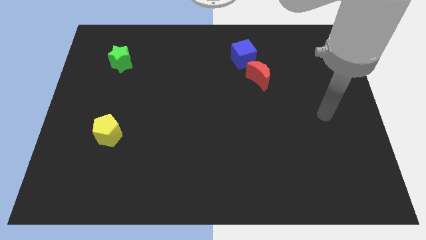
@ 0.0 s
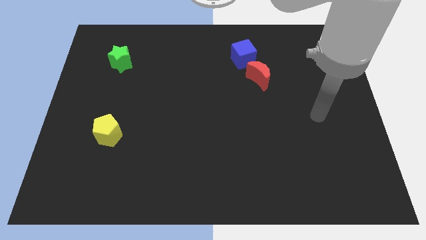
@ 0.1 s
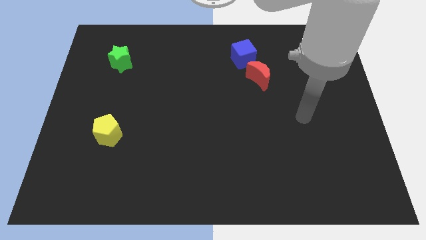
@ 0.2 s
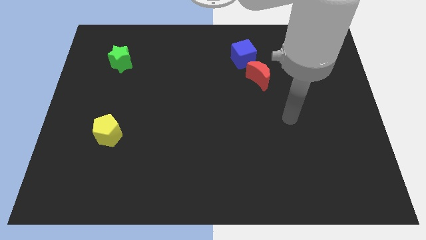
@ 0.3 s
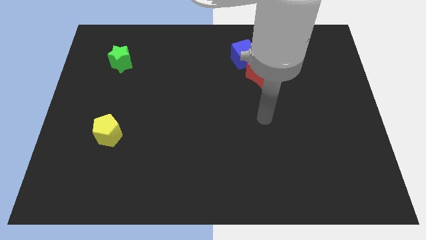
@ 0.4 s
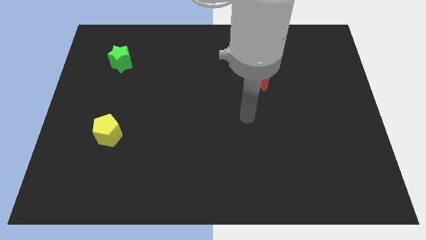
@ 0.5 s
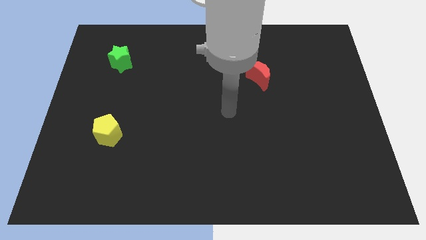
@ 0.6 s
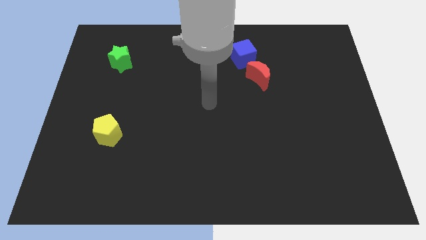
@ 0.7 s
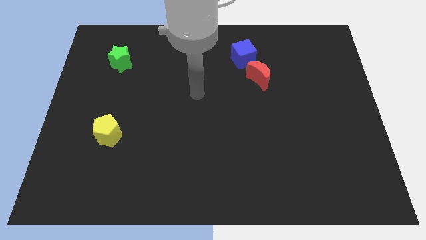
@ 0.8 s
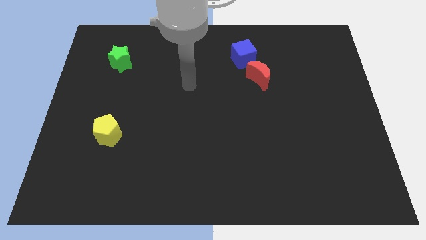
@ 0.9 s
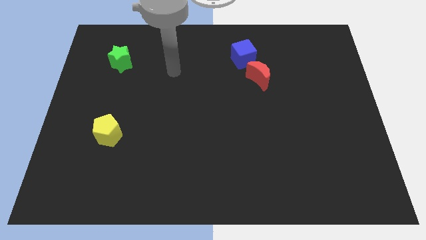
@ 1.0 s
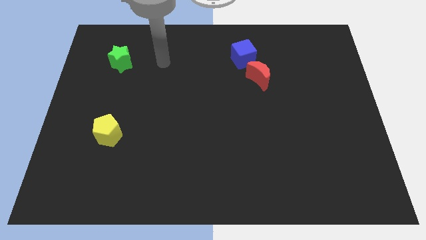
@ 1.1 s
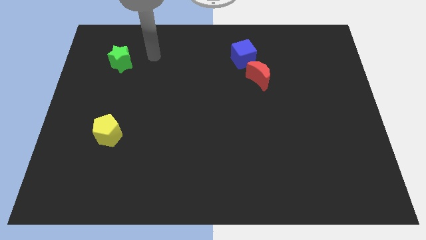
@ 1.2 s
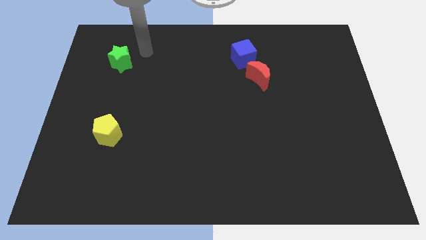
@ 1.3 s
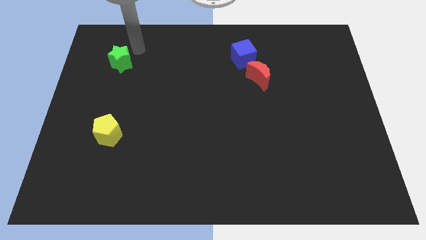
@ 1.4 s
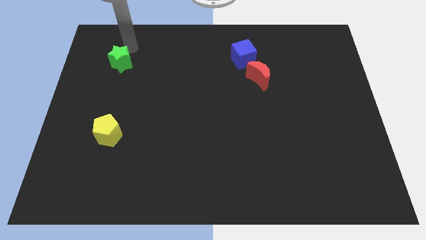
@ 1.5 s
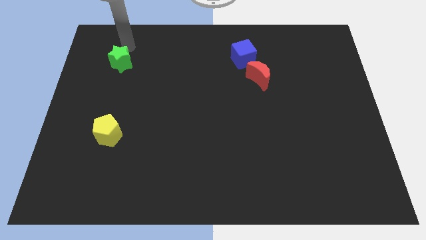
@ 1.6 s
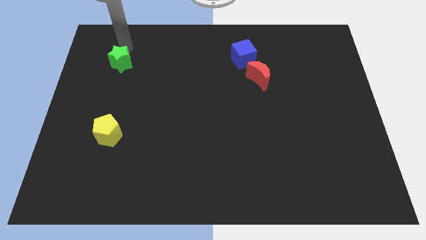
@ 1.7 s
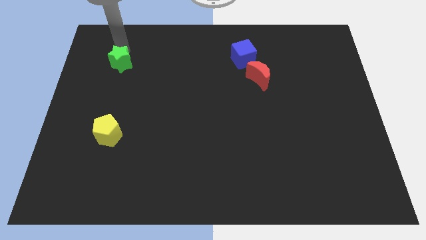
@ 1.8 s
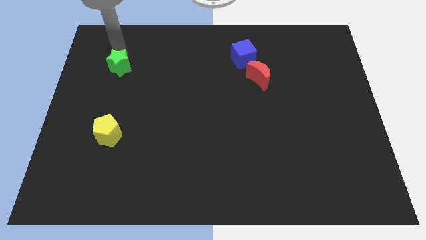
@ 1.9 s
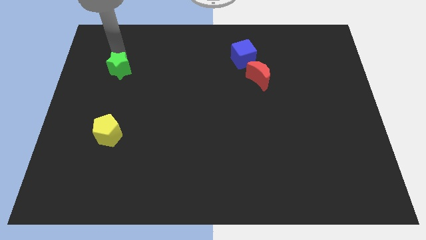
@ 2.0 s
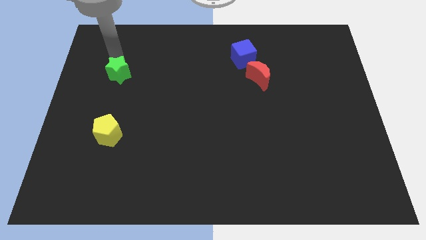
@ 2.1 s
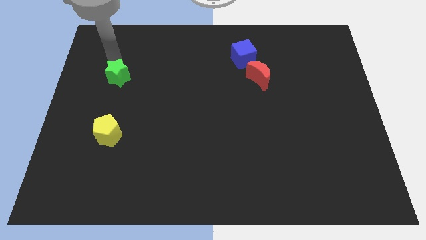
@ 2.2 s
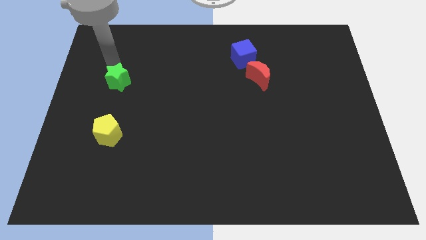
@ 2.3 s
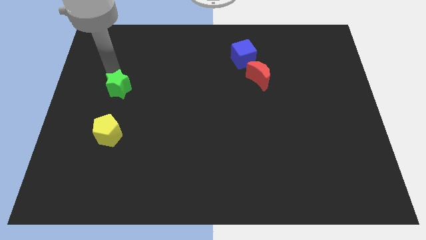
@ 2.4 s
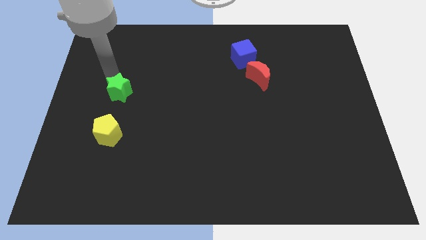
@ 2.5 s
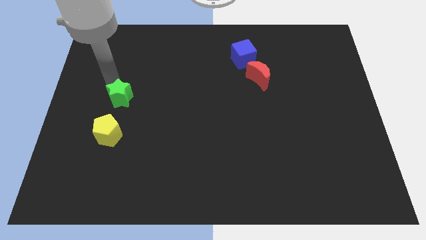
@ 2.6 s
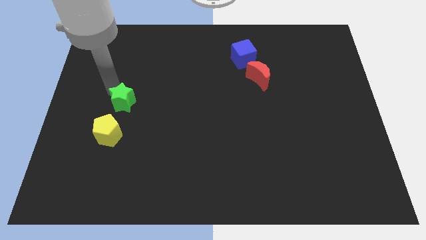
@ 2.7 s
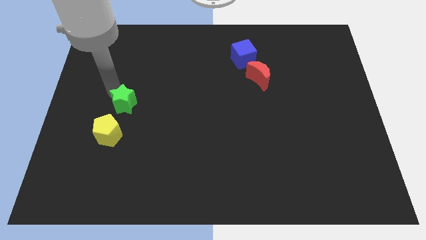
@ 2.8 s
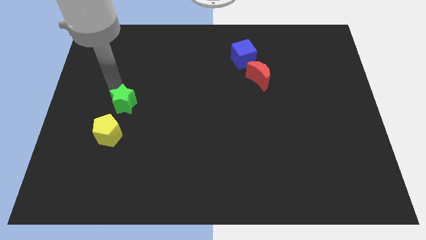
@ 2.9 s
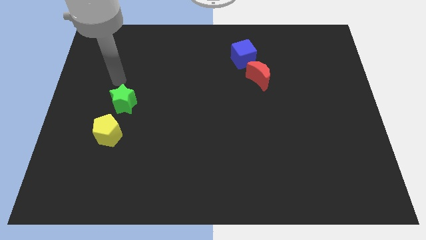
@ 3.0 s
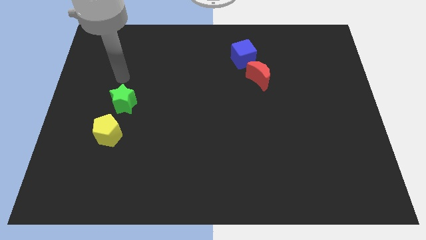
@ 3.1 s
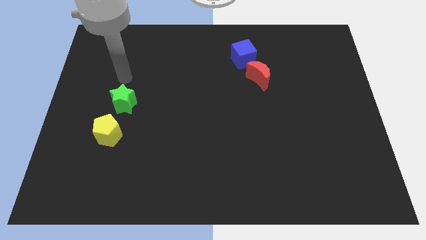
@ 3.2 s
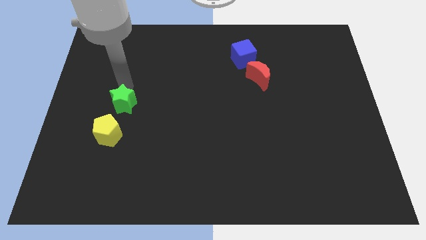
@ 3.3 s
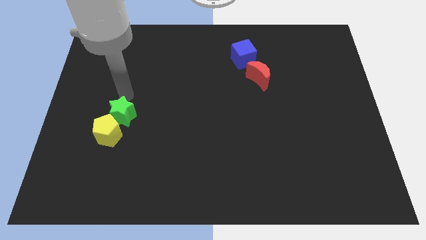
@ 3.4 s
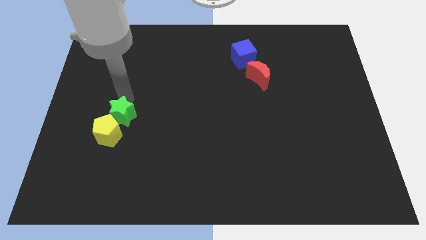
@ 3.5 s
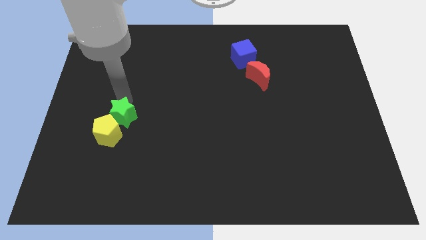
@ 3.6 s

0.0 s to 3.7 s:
push the green star close to the yellow pentagon

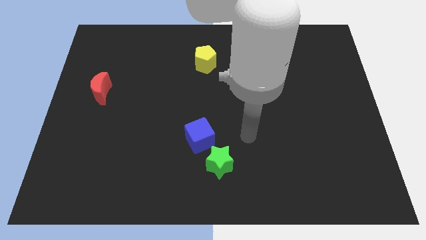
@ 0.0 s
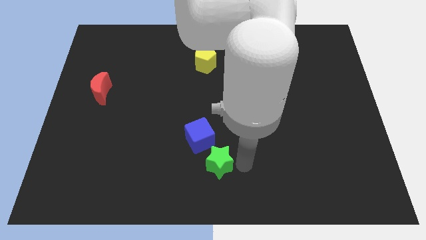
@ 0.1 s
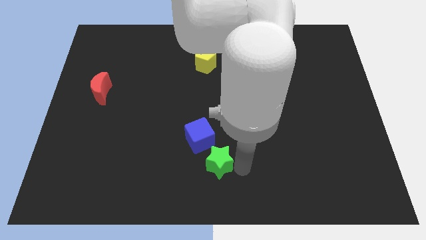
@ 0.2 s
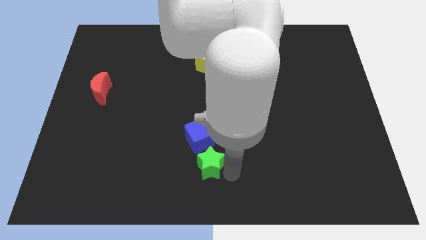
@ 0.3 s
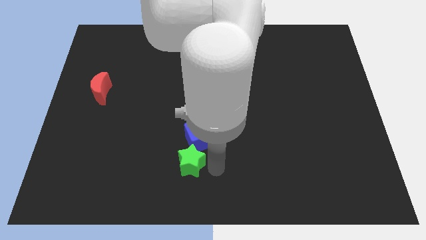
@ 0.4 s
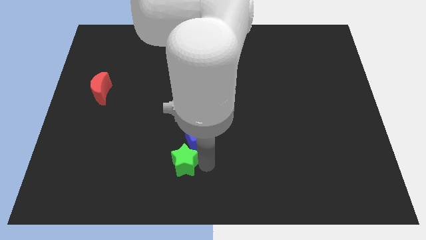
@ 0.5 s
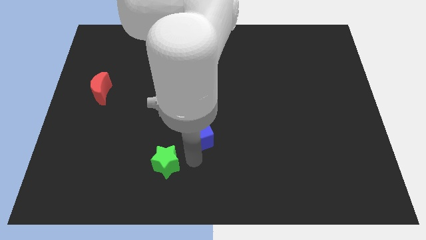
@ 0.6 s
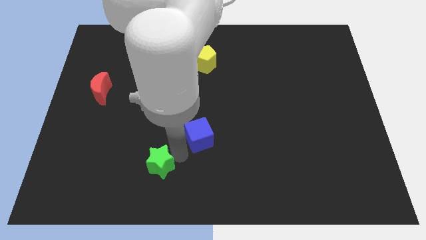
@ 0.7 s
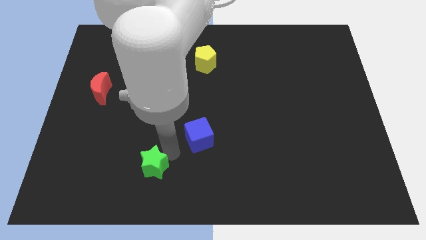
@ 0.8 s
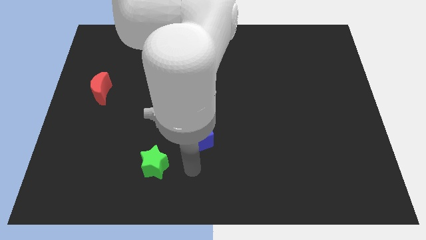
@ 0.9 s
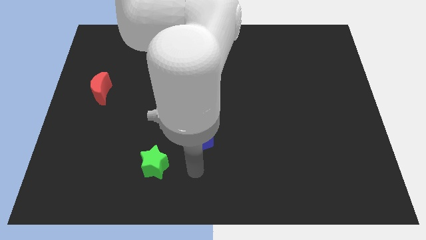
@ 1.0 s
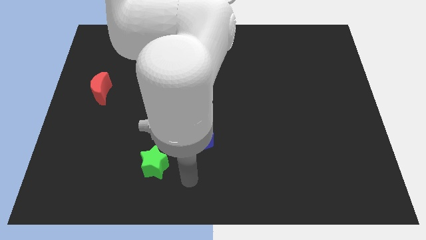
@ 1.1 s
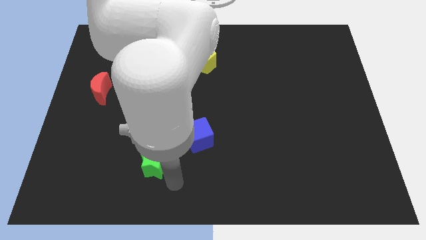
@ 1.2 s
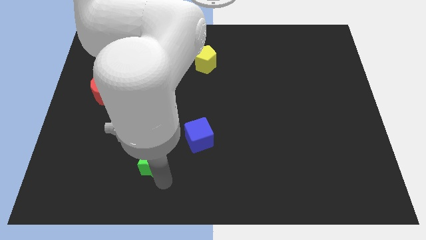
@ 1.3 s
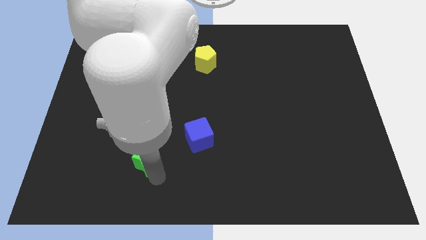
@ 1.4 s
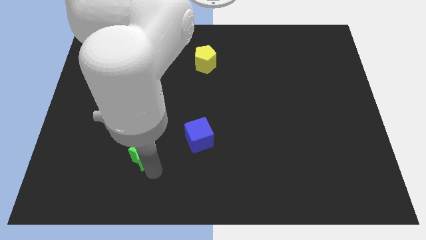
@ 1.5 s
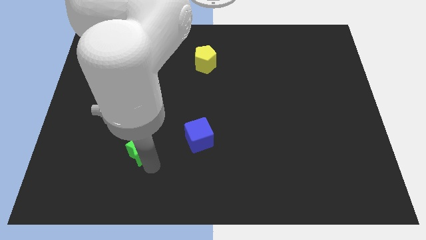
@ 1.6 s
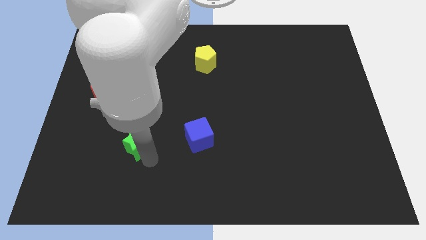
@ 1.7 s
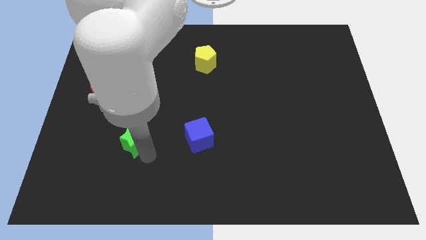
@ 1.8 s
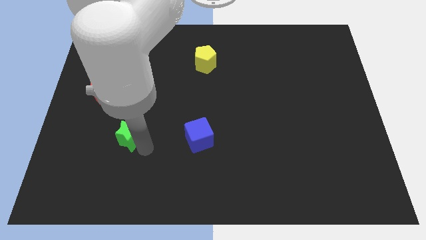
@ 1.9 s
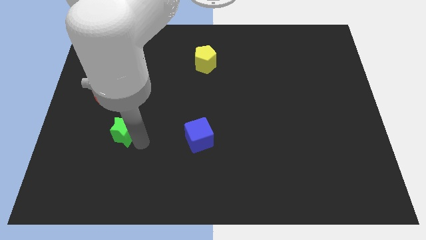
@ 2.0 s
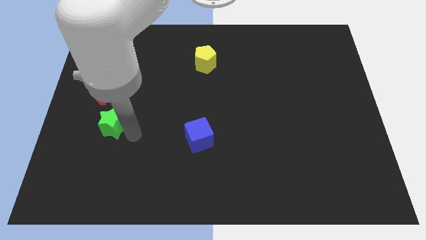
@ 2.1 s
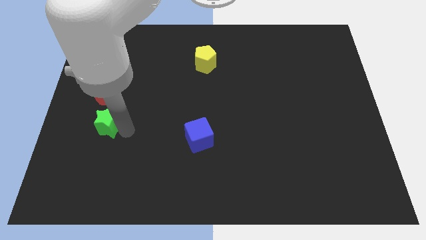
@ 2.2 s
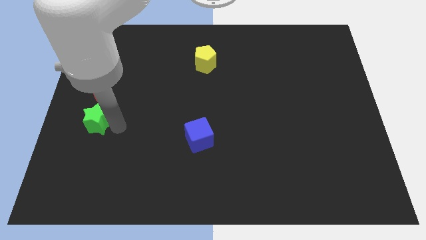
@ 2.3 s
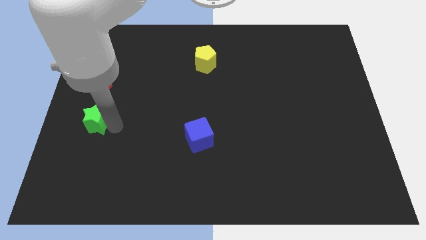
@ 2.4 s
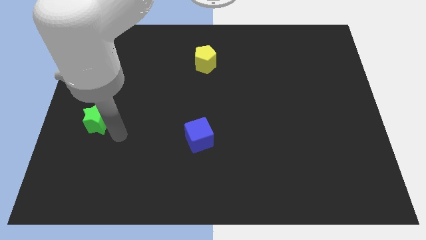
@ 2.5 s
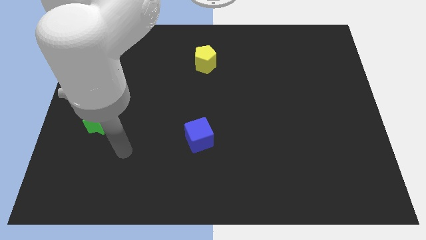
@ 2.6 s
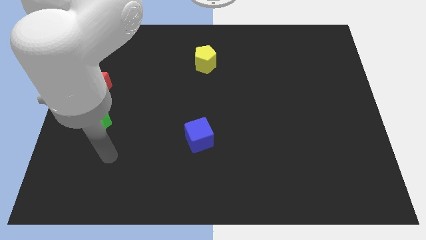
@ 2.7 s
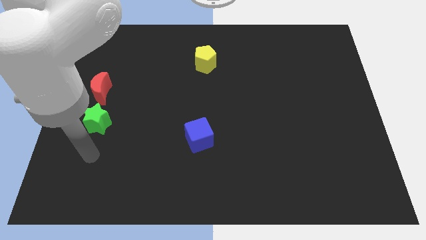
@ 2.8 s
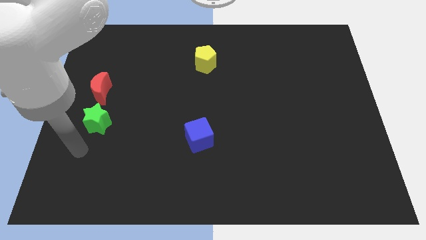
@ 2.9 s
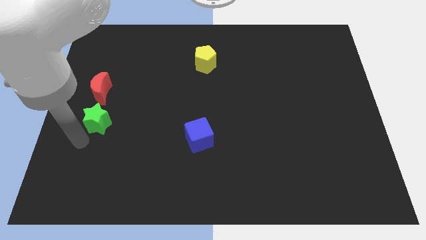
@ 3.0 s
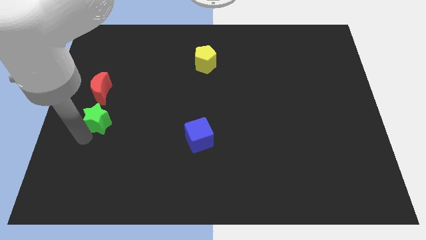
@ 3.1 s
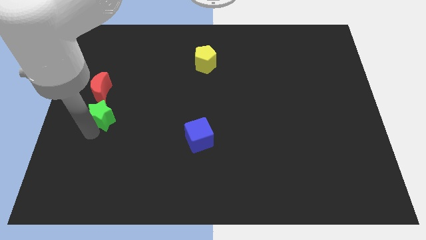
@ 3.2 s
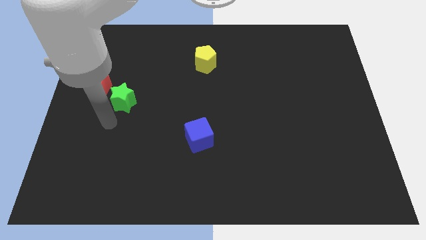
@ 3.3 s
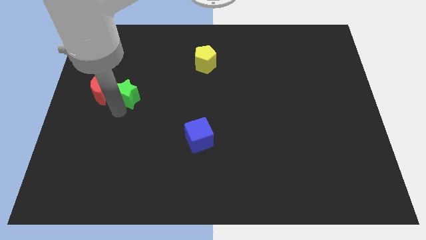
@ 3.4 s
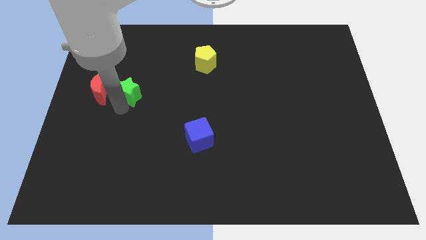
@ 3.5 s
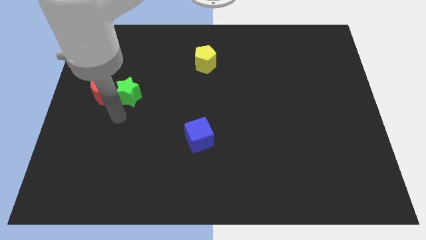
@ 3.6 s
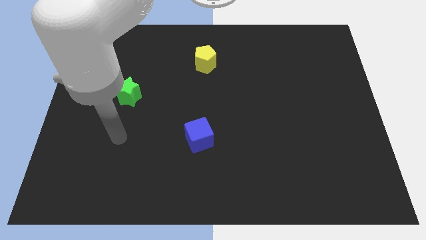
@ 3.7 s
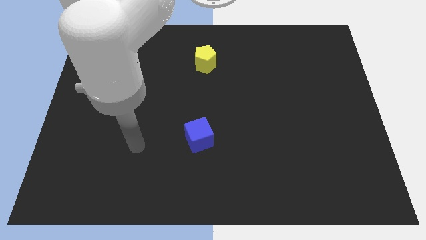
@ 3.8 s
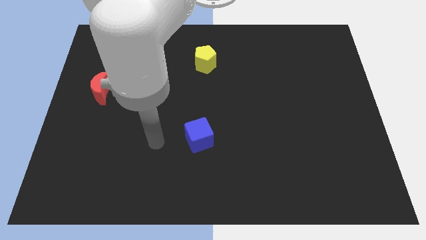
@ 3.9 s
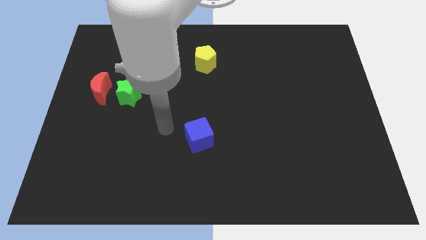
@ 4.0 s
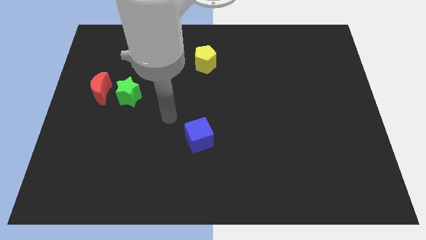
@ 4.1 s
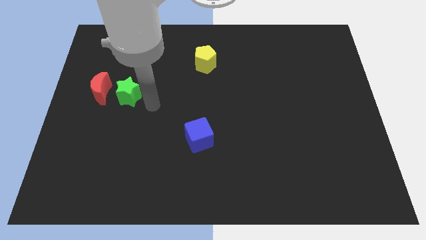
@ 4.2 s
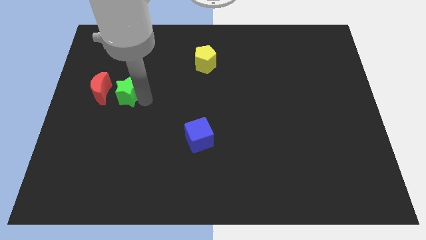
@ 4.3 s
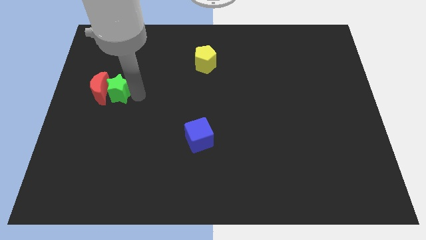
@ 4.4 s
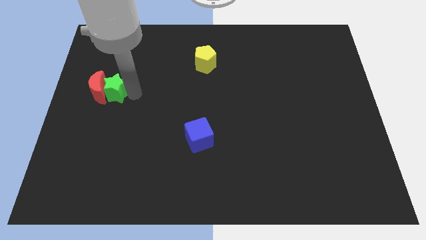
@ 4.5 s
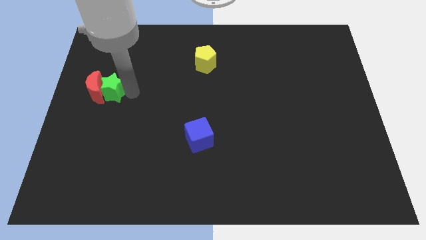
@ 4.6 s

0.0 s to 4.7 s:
move the green block close to the red moon
